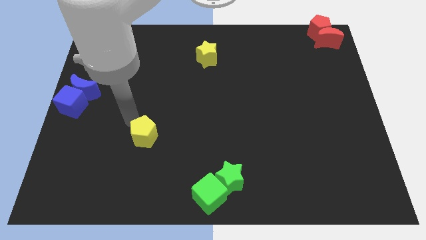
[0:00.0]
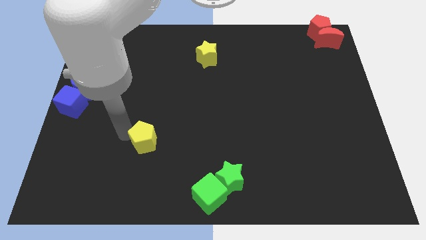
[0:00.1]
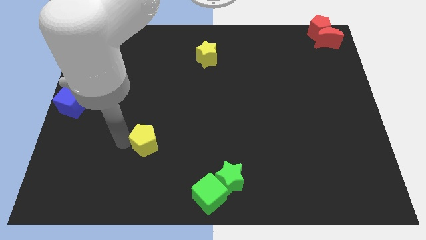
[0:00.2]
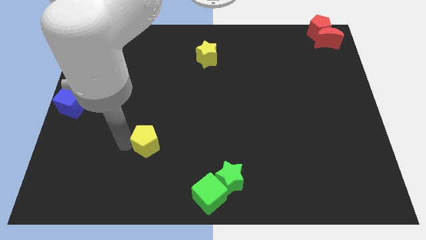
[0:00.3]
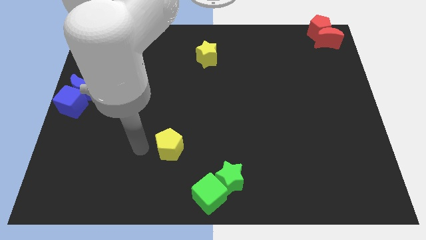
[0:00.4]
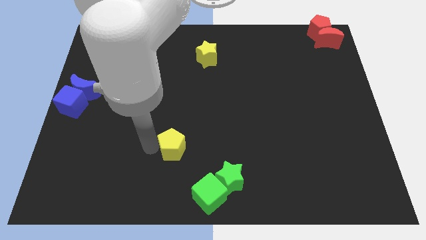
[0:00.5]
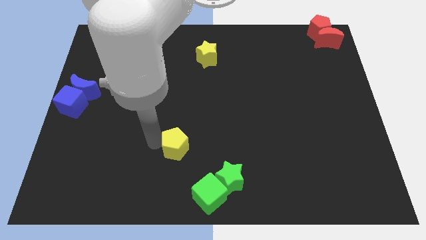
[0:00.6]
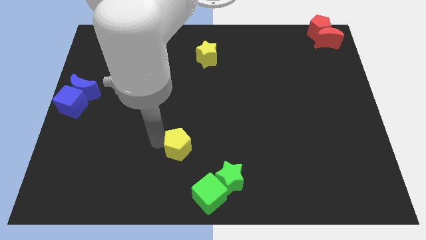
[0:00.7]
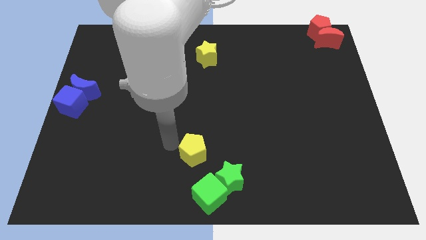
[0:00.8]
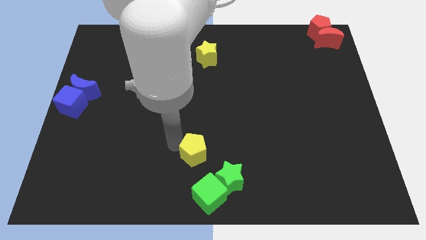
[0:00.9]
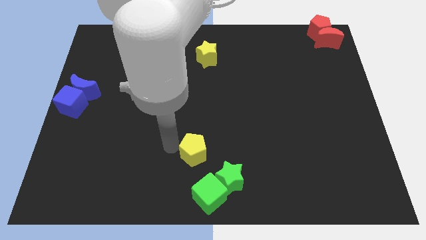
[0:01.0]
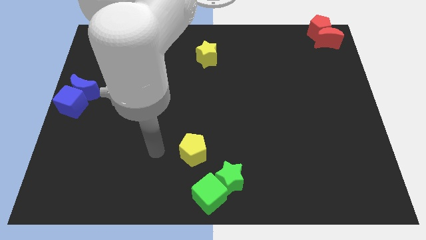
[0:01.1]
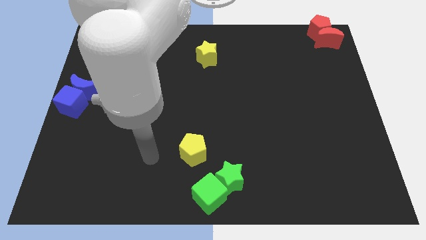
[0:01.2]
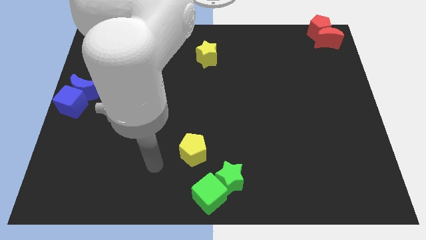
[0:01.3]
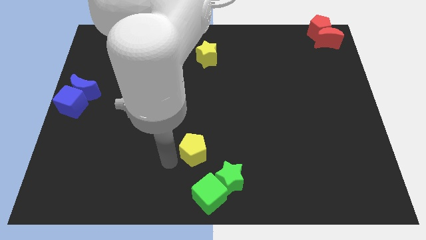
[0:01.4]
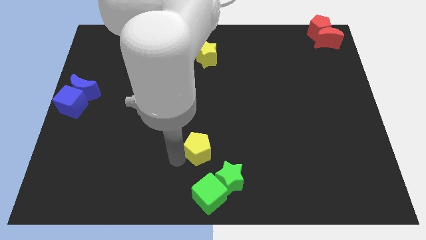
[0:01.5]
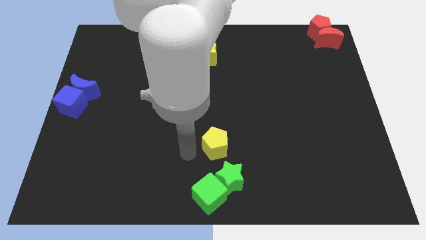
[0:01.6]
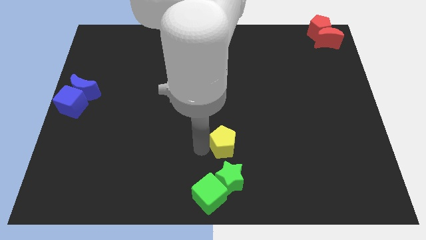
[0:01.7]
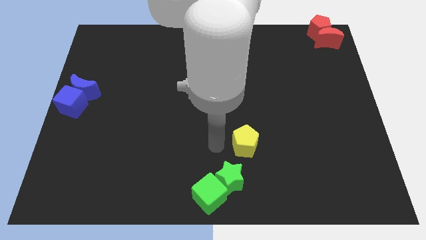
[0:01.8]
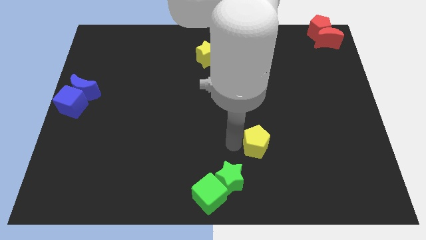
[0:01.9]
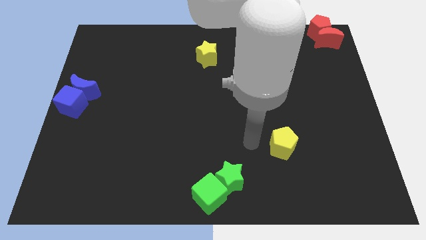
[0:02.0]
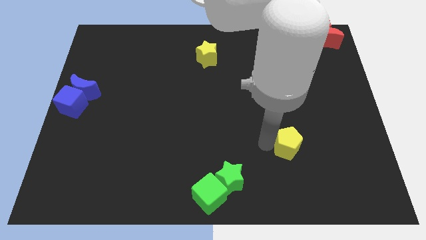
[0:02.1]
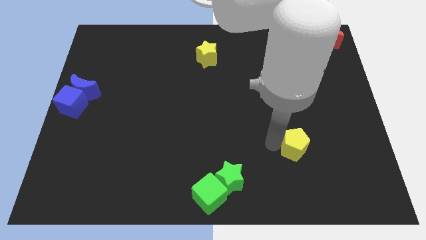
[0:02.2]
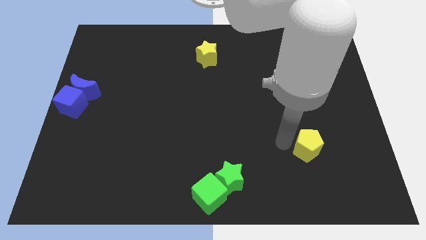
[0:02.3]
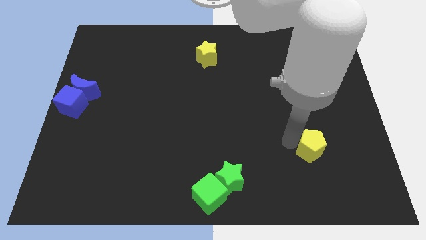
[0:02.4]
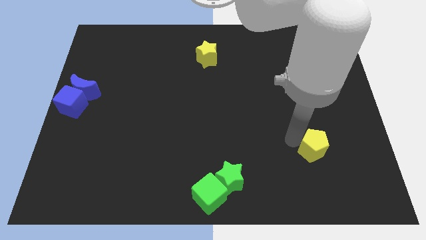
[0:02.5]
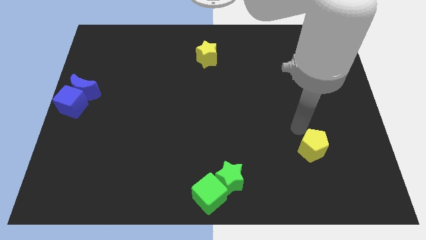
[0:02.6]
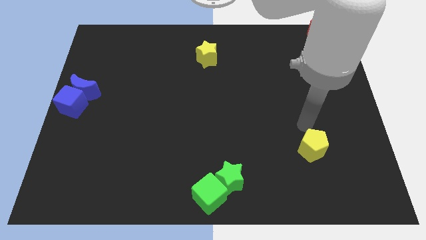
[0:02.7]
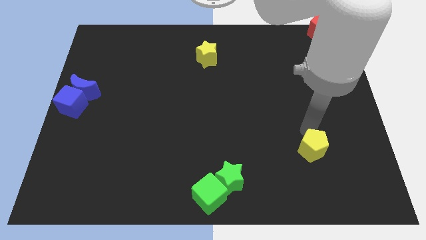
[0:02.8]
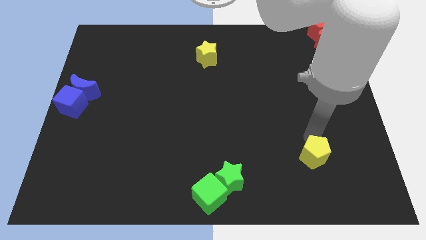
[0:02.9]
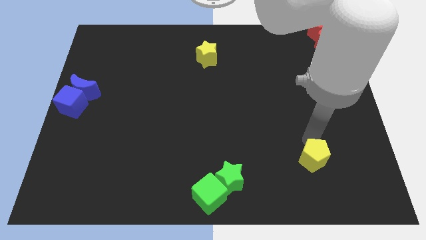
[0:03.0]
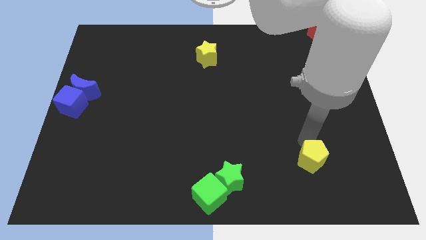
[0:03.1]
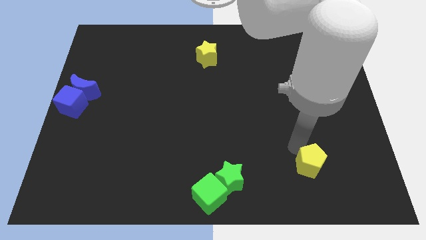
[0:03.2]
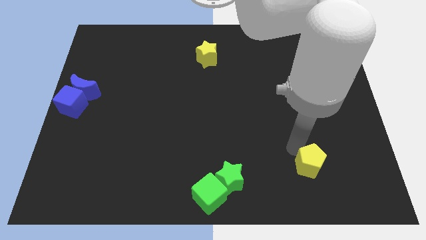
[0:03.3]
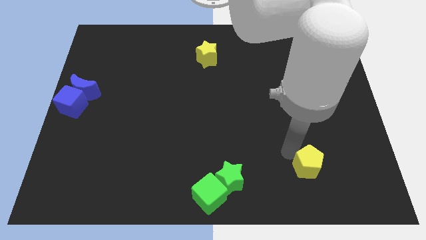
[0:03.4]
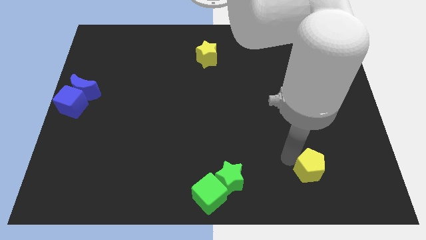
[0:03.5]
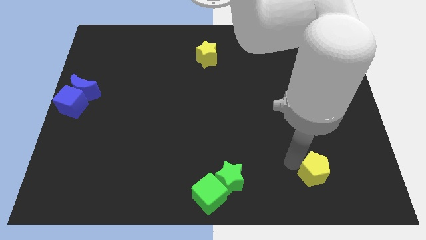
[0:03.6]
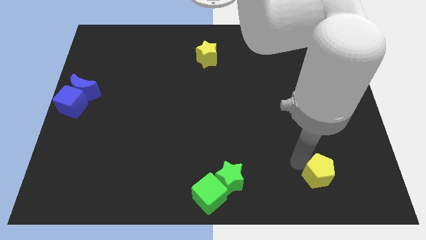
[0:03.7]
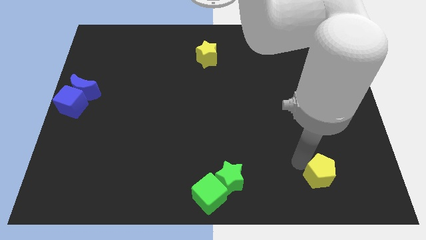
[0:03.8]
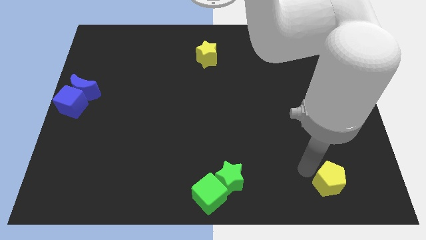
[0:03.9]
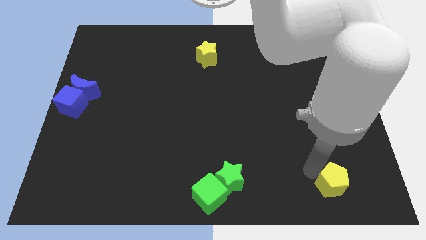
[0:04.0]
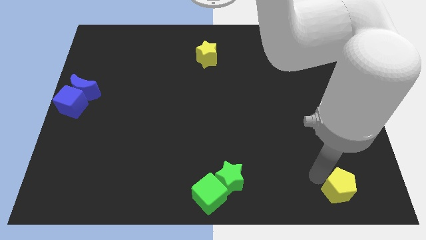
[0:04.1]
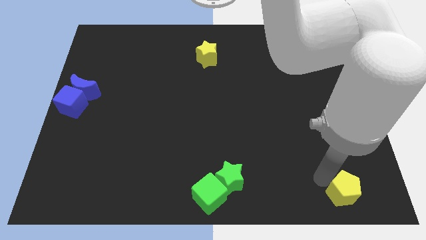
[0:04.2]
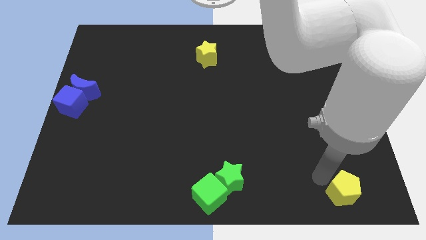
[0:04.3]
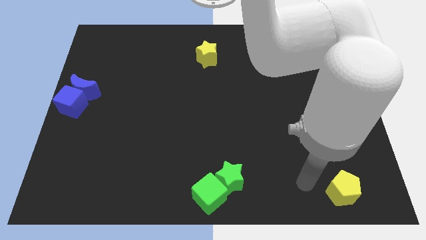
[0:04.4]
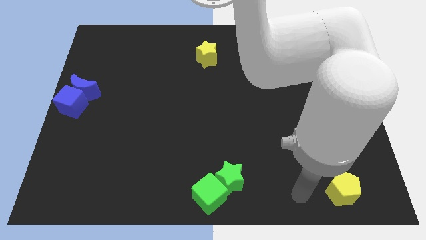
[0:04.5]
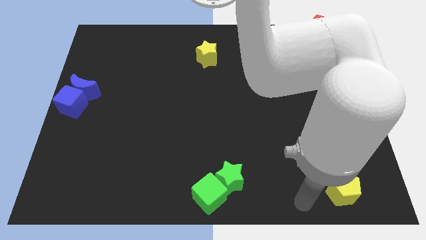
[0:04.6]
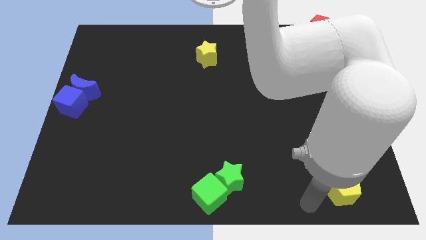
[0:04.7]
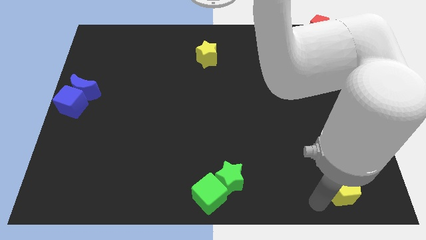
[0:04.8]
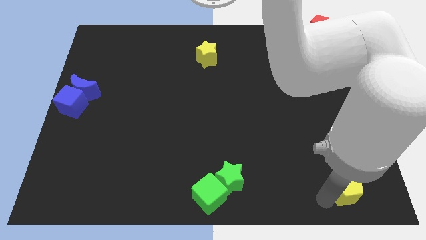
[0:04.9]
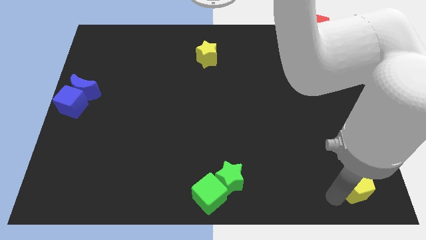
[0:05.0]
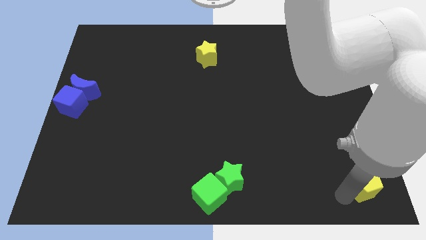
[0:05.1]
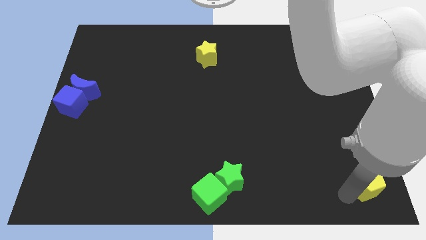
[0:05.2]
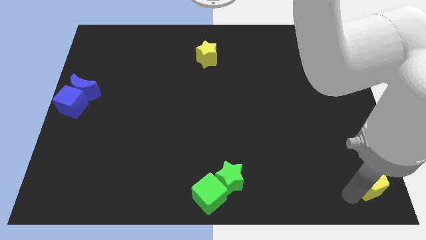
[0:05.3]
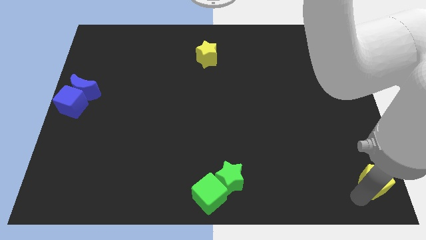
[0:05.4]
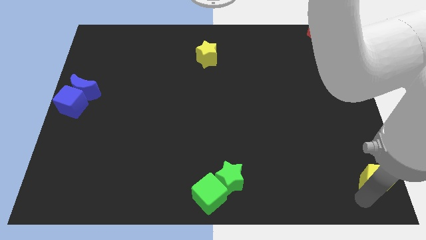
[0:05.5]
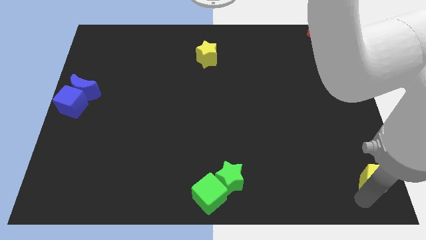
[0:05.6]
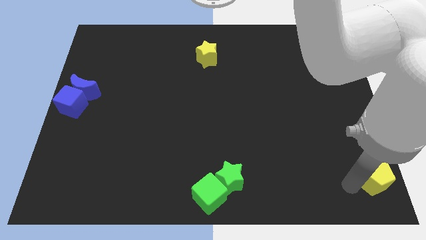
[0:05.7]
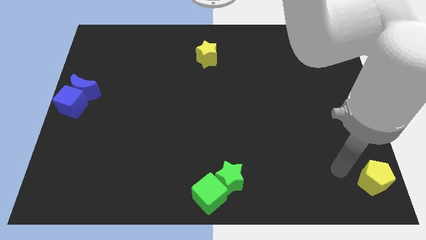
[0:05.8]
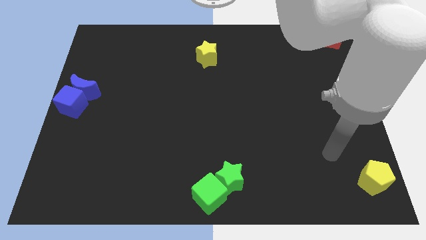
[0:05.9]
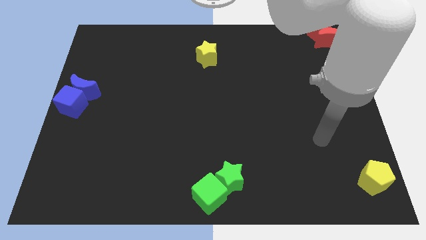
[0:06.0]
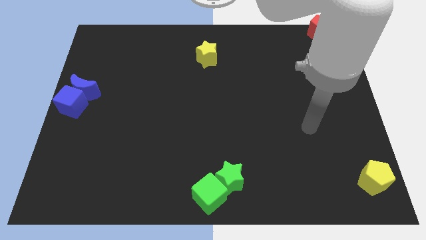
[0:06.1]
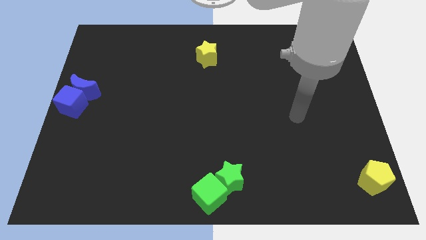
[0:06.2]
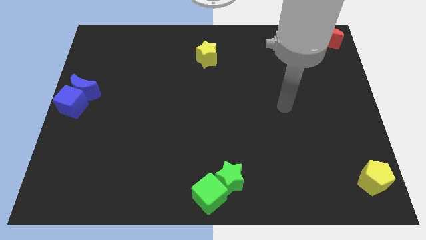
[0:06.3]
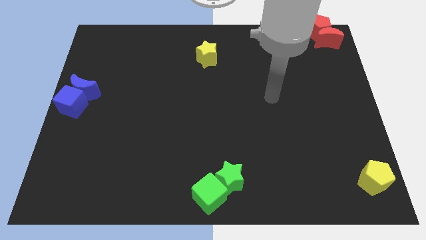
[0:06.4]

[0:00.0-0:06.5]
move the yellow pentagon to the bottom right on the board

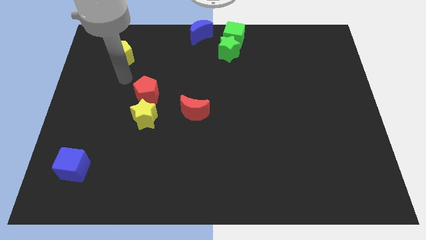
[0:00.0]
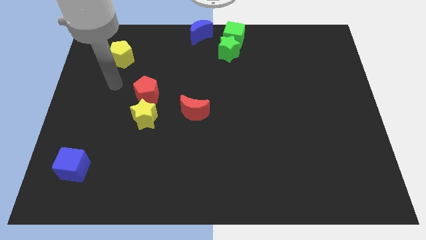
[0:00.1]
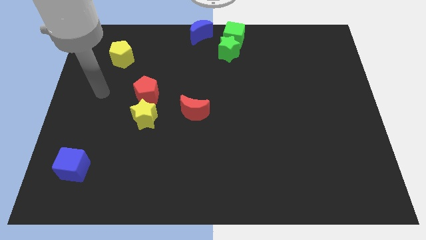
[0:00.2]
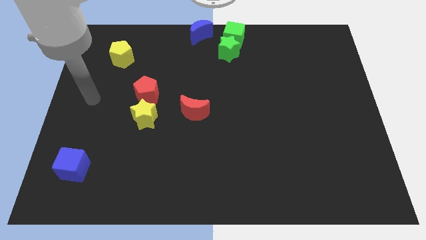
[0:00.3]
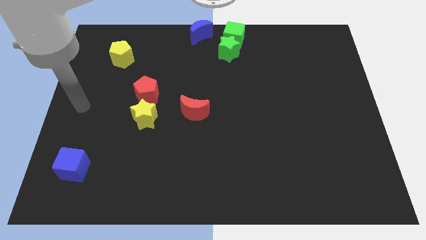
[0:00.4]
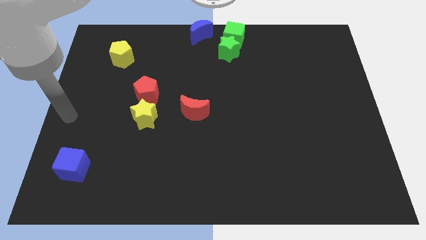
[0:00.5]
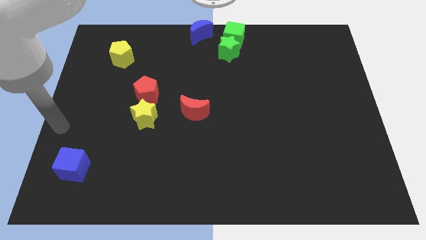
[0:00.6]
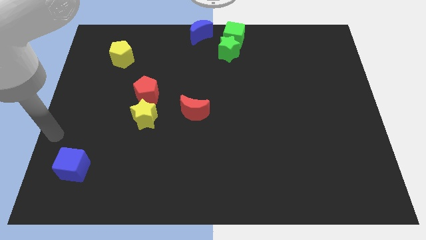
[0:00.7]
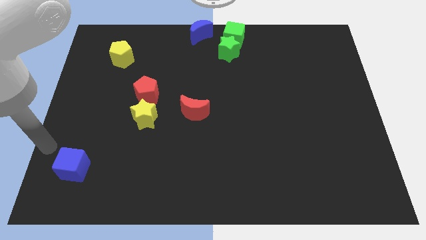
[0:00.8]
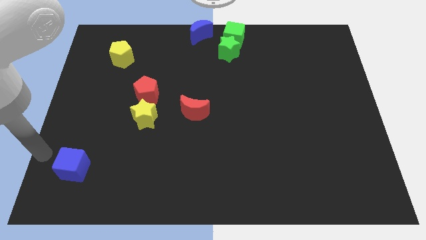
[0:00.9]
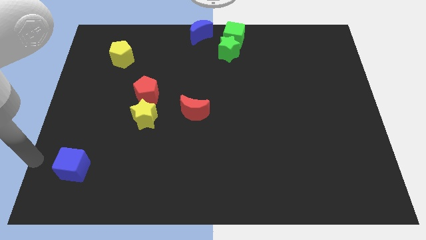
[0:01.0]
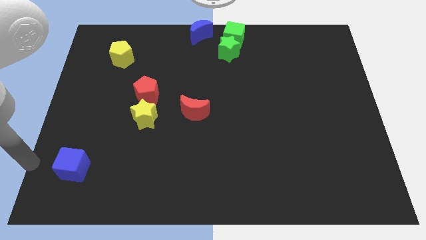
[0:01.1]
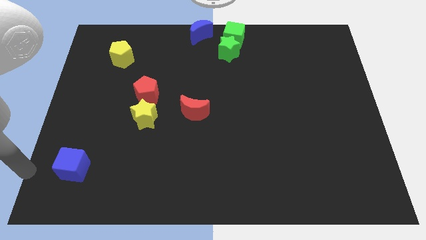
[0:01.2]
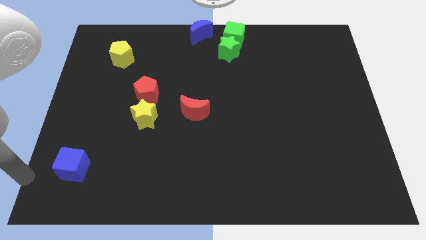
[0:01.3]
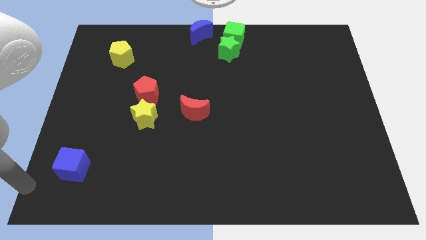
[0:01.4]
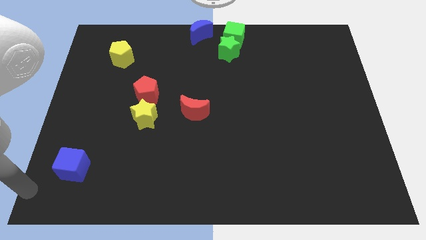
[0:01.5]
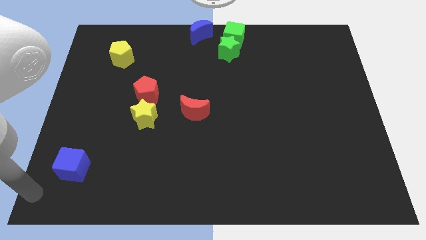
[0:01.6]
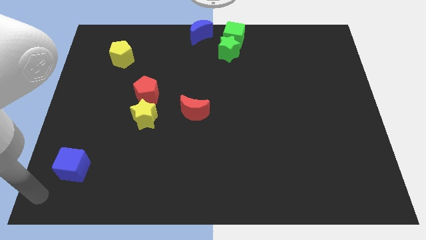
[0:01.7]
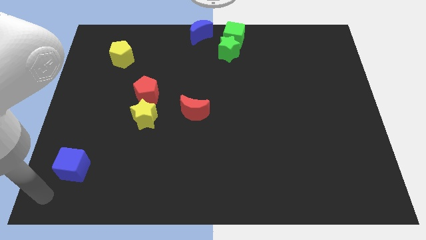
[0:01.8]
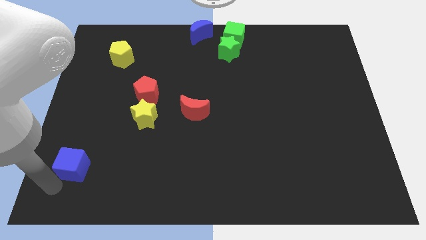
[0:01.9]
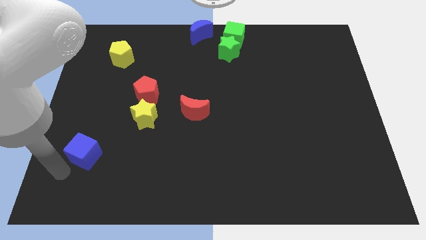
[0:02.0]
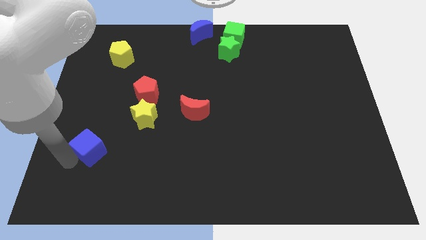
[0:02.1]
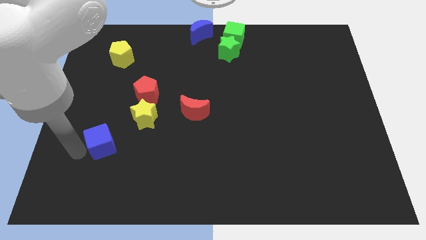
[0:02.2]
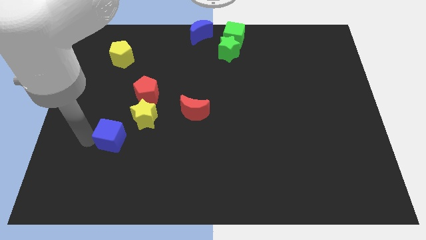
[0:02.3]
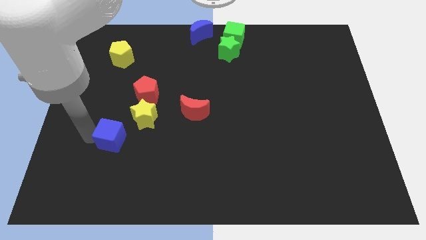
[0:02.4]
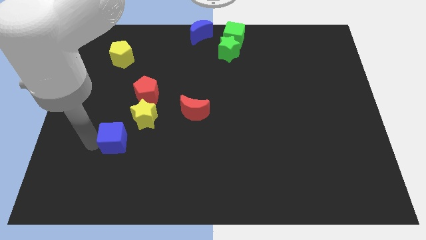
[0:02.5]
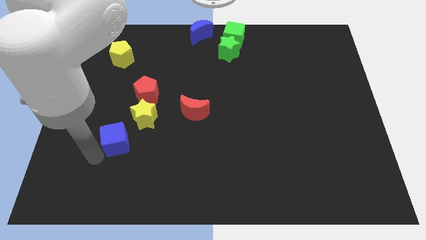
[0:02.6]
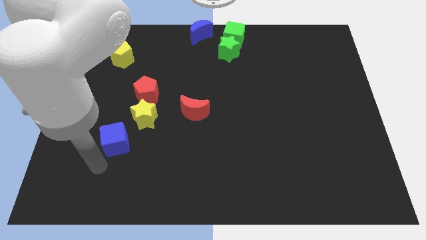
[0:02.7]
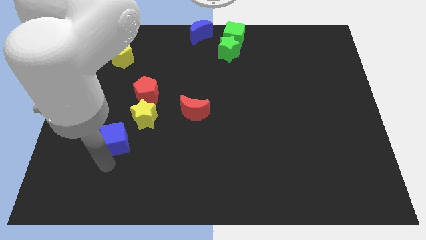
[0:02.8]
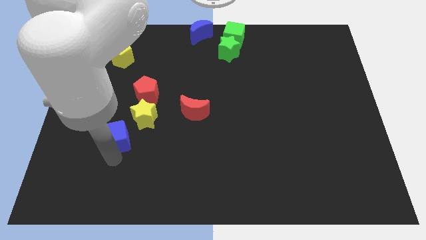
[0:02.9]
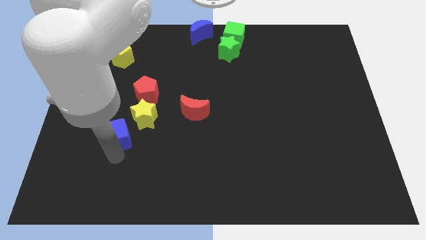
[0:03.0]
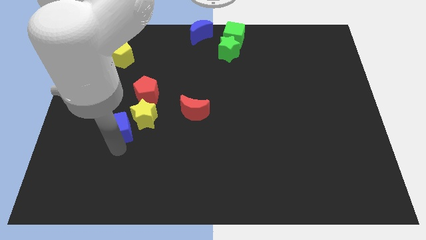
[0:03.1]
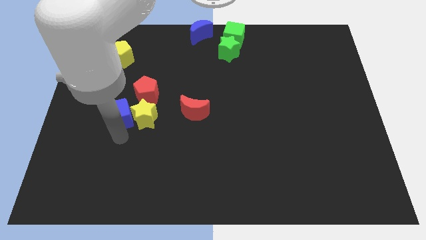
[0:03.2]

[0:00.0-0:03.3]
move the blue cube towards the left of the yellow star
